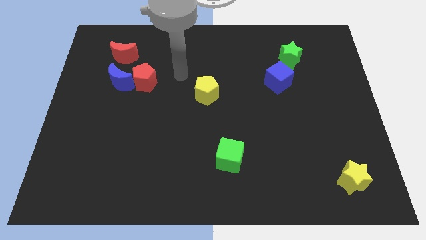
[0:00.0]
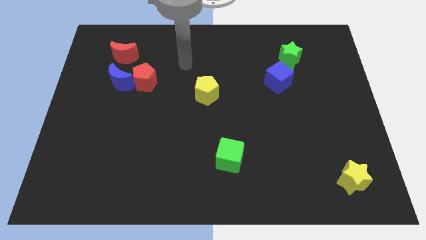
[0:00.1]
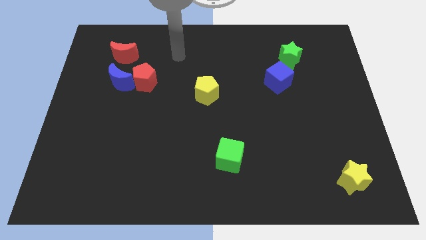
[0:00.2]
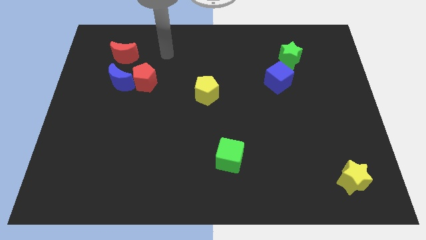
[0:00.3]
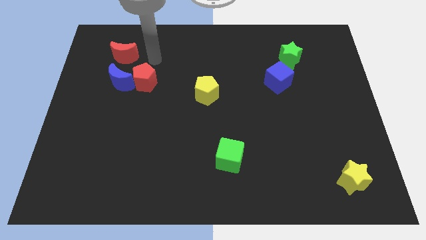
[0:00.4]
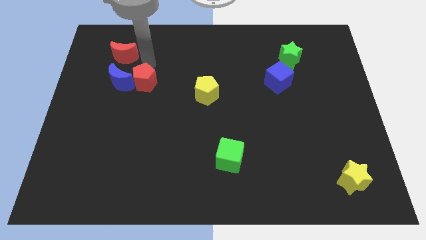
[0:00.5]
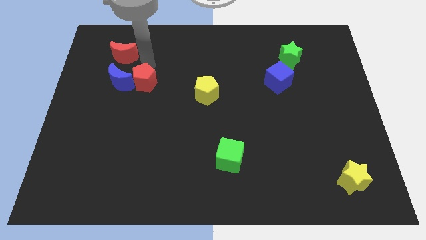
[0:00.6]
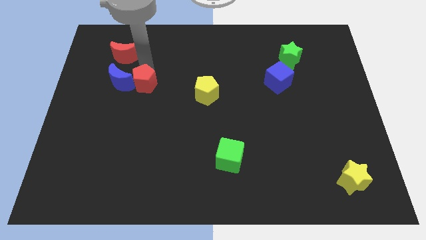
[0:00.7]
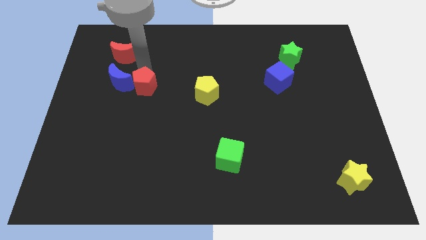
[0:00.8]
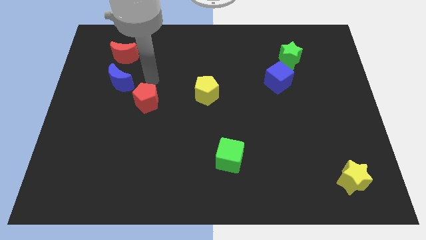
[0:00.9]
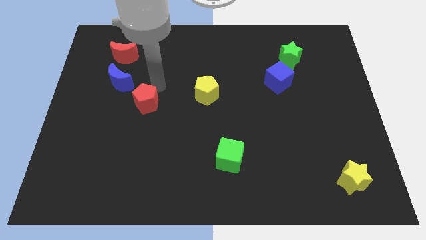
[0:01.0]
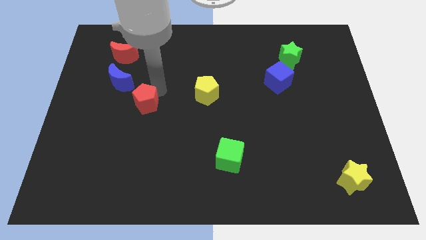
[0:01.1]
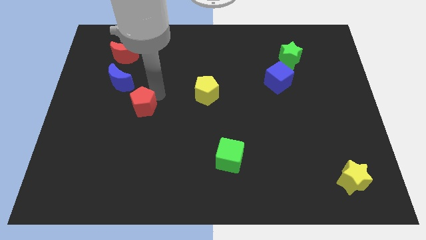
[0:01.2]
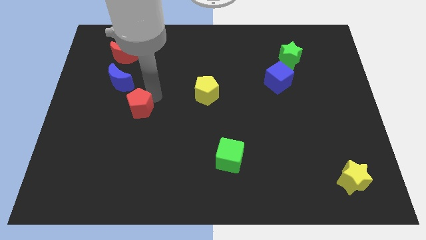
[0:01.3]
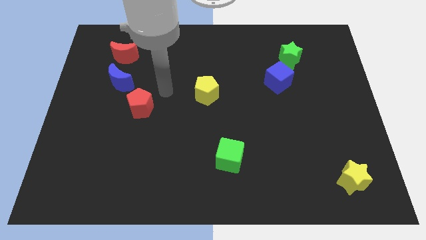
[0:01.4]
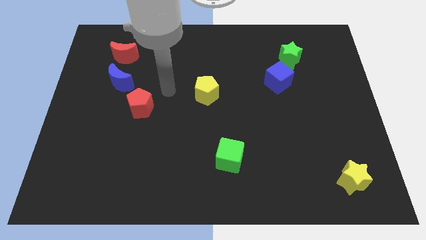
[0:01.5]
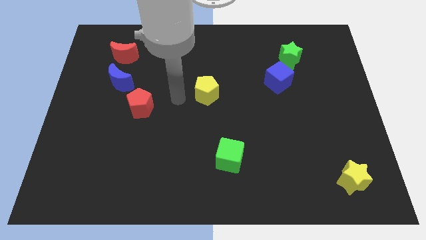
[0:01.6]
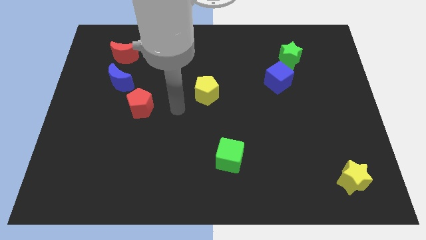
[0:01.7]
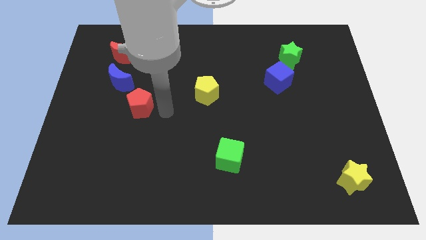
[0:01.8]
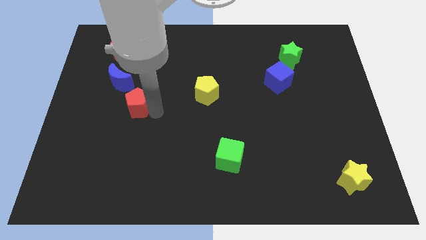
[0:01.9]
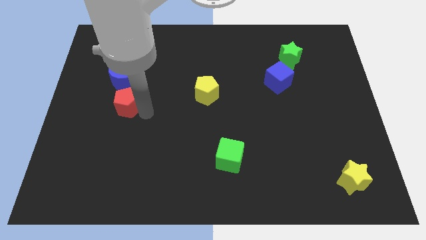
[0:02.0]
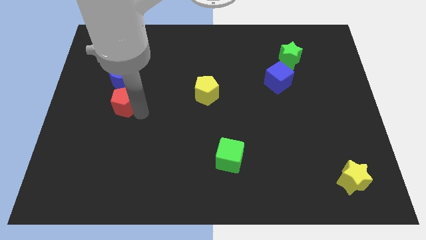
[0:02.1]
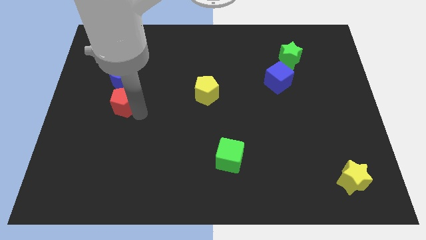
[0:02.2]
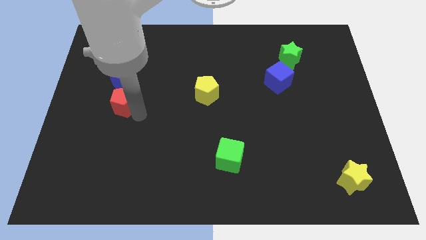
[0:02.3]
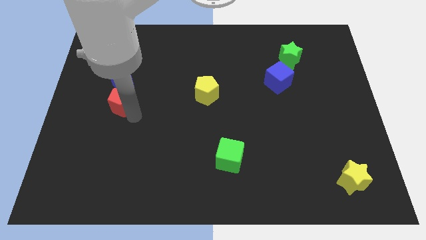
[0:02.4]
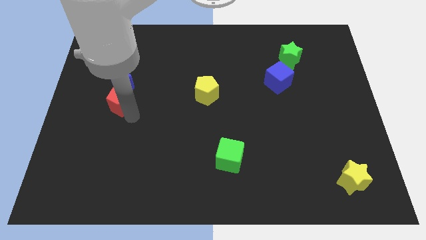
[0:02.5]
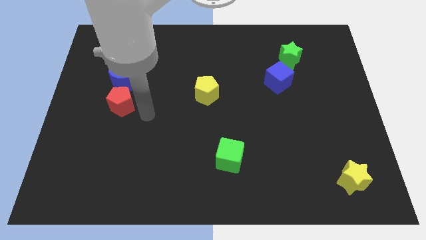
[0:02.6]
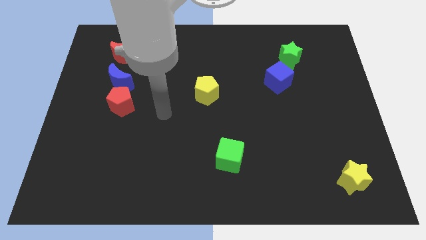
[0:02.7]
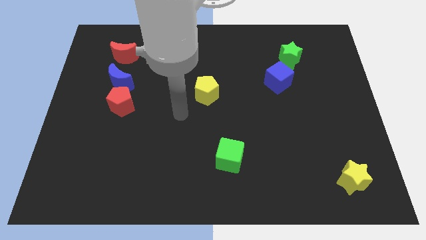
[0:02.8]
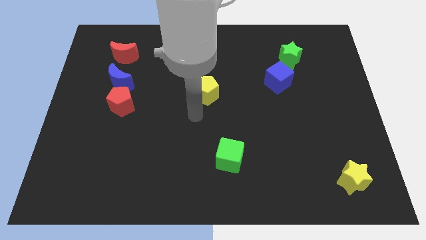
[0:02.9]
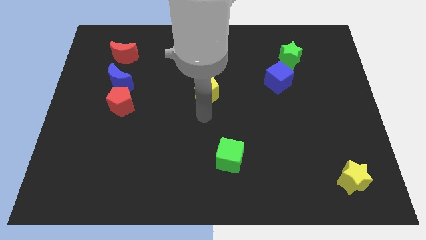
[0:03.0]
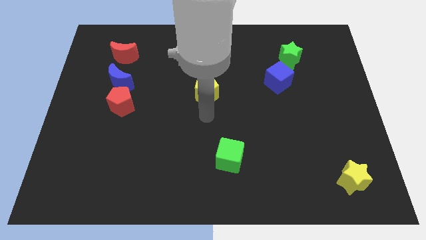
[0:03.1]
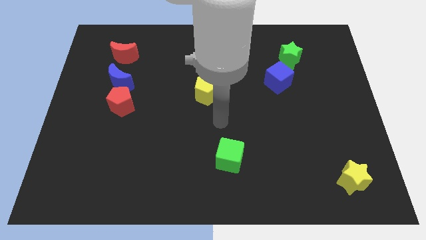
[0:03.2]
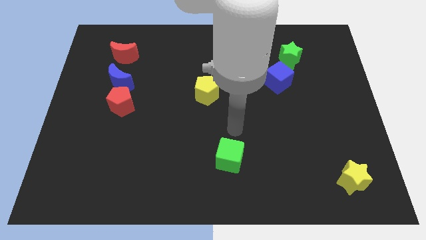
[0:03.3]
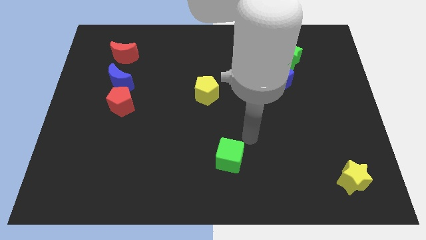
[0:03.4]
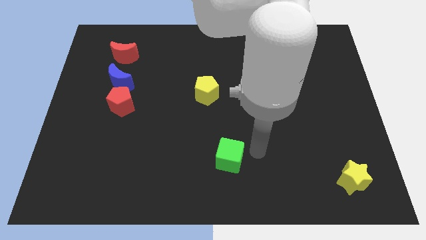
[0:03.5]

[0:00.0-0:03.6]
place the red pentagon below the blue moon

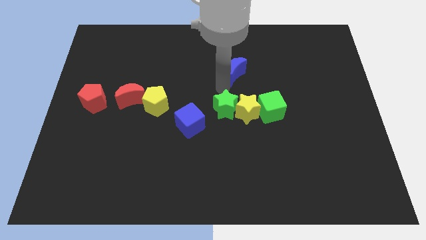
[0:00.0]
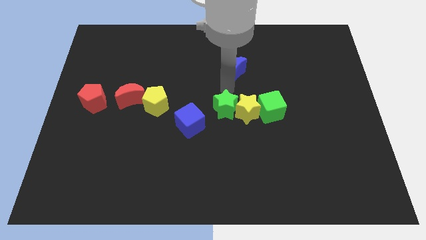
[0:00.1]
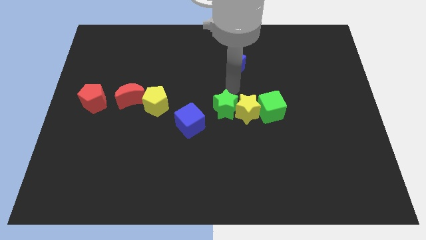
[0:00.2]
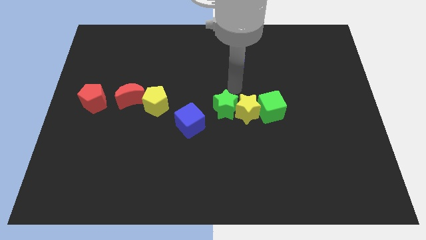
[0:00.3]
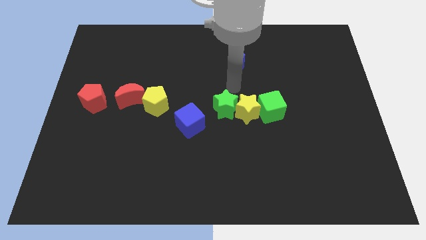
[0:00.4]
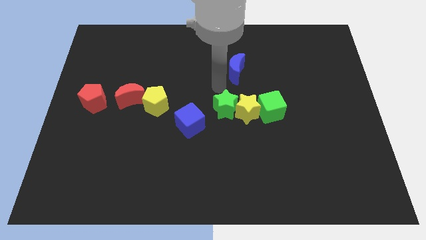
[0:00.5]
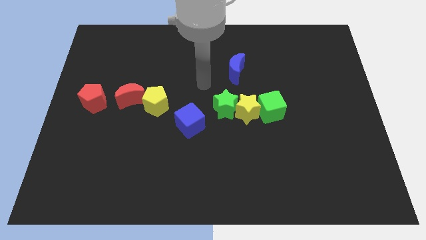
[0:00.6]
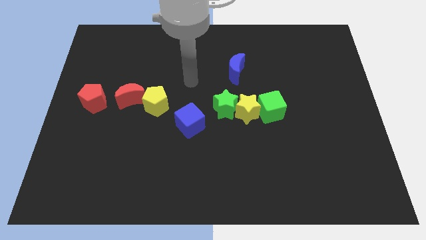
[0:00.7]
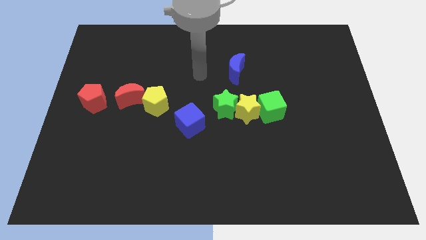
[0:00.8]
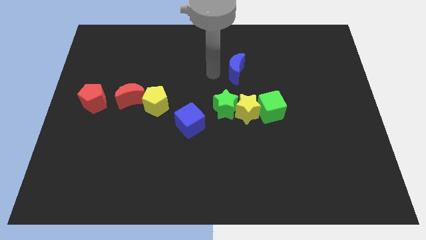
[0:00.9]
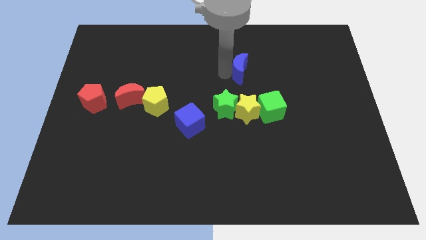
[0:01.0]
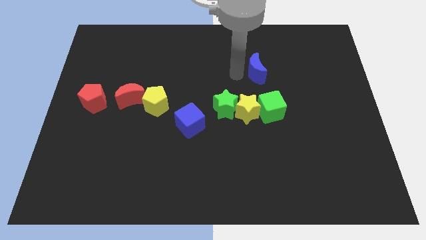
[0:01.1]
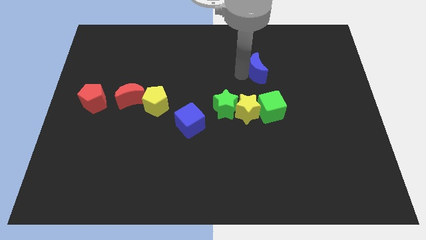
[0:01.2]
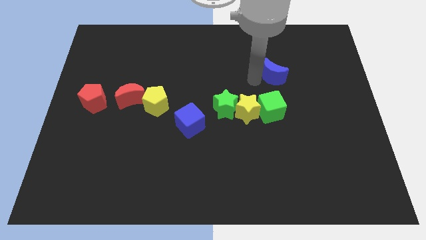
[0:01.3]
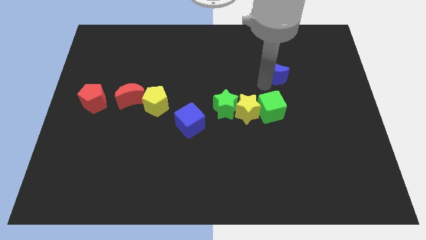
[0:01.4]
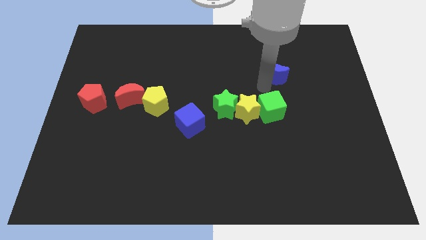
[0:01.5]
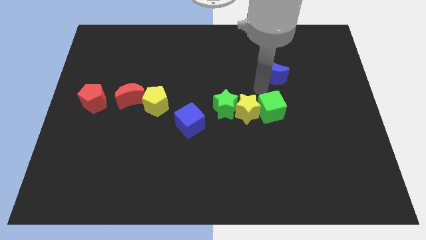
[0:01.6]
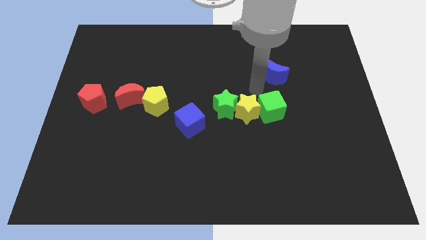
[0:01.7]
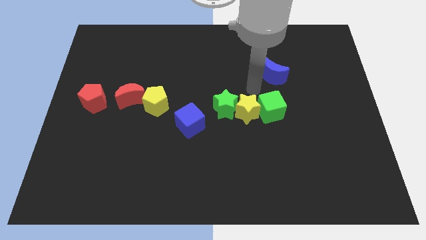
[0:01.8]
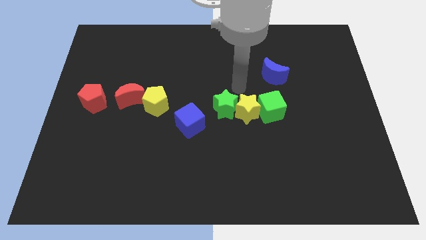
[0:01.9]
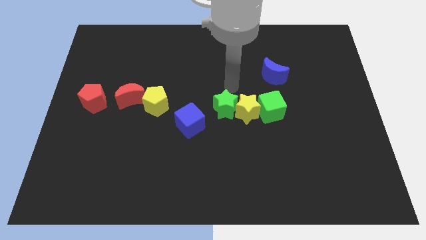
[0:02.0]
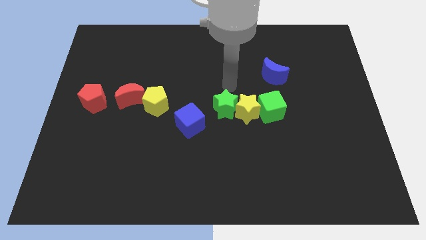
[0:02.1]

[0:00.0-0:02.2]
put blue moon on above the green cube

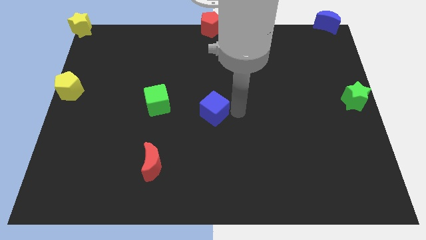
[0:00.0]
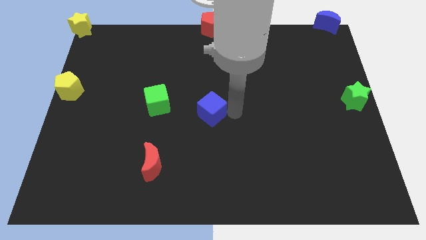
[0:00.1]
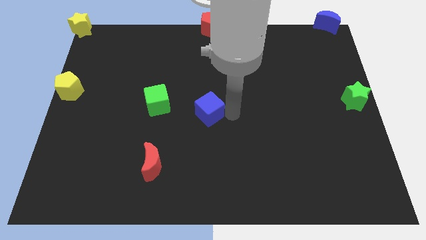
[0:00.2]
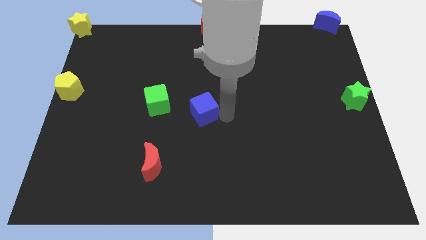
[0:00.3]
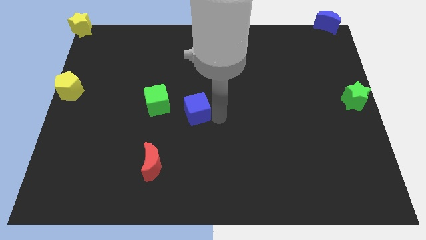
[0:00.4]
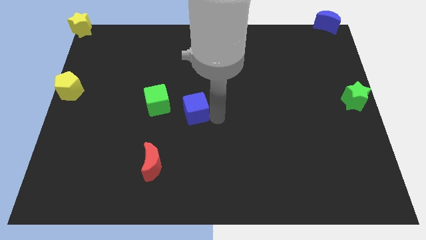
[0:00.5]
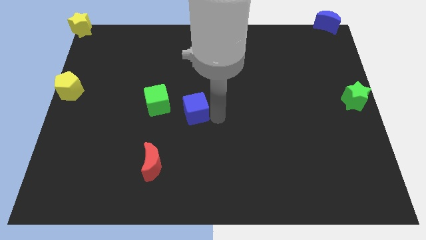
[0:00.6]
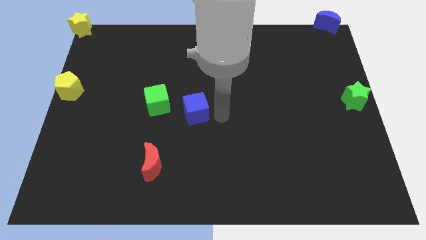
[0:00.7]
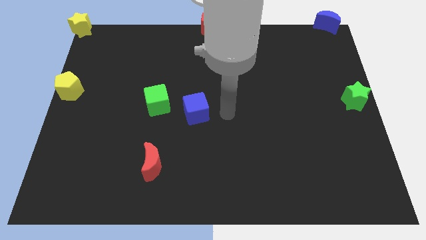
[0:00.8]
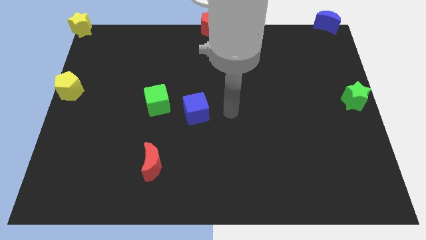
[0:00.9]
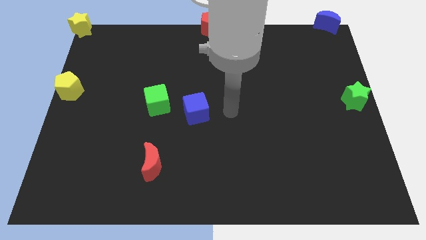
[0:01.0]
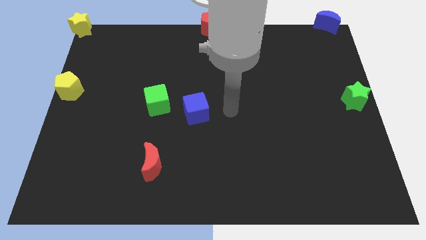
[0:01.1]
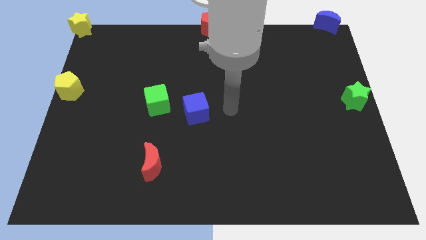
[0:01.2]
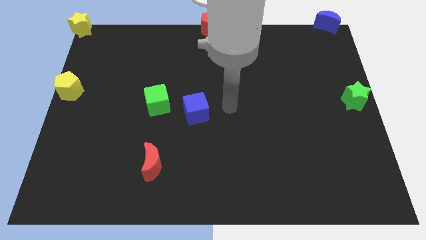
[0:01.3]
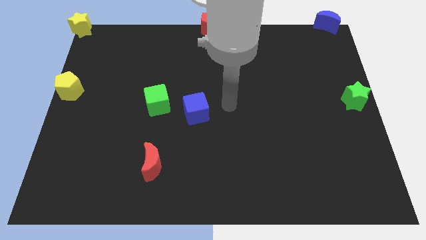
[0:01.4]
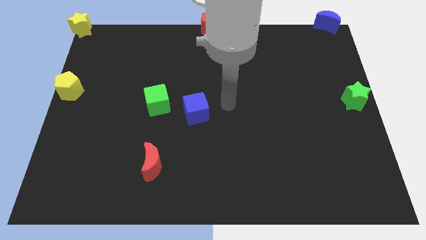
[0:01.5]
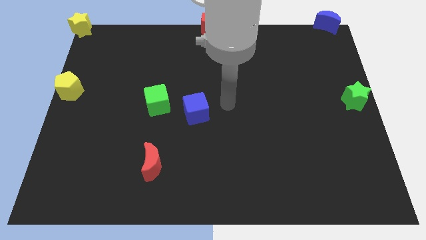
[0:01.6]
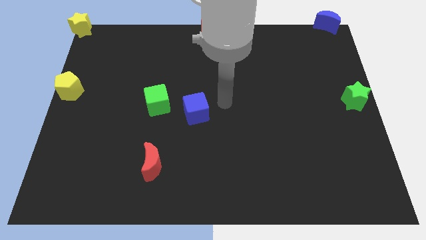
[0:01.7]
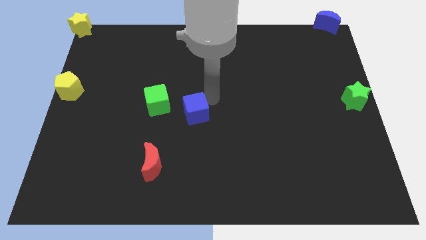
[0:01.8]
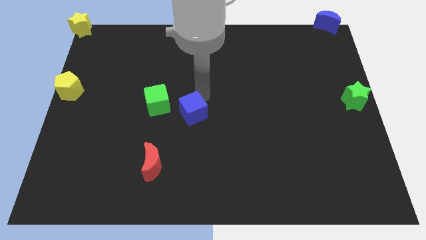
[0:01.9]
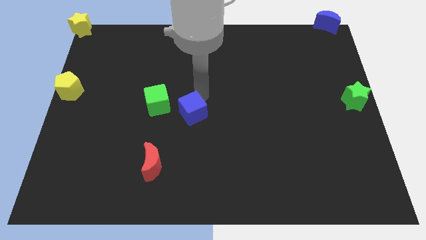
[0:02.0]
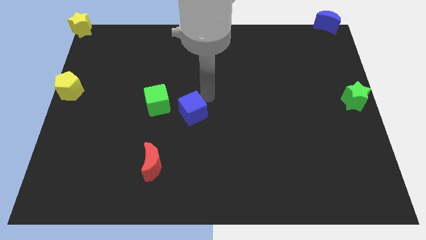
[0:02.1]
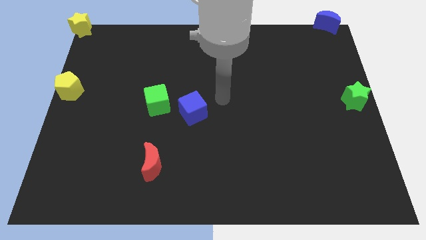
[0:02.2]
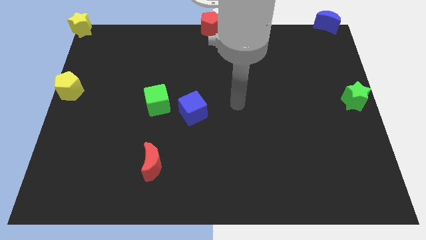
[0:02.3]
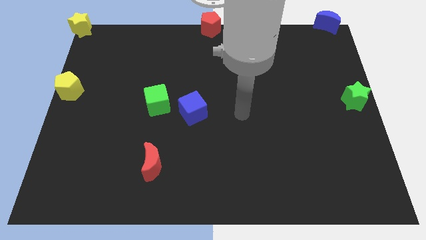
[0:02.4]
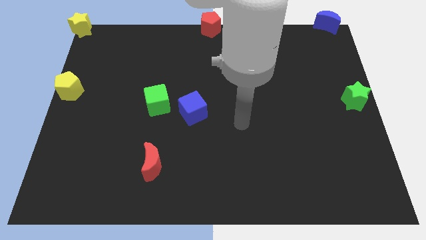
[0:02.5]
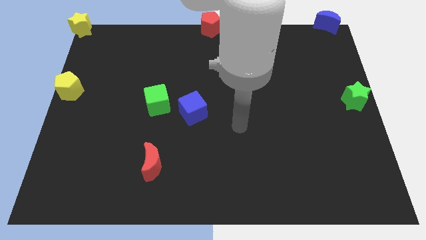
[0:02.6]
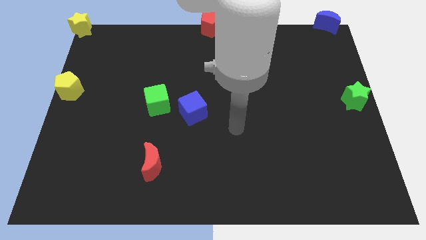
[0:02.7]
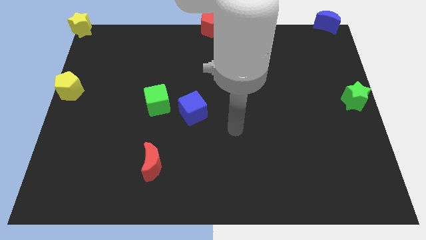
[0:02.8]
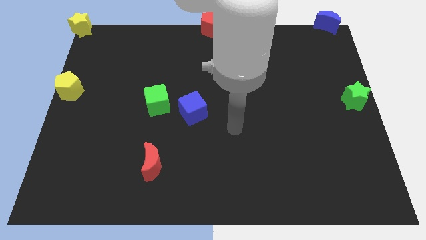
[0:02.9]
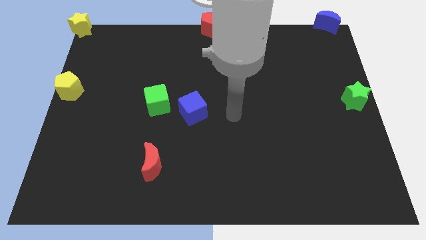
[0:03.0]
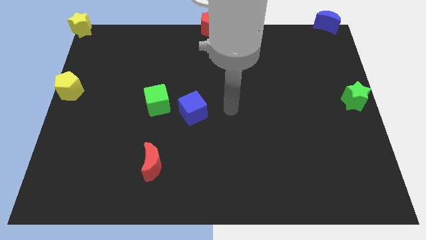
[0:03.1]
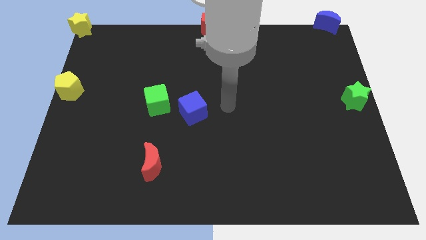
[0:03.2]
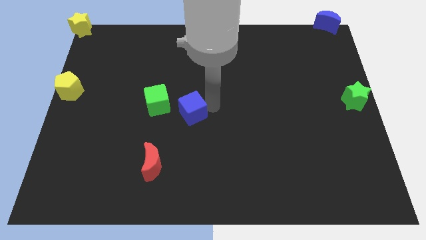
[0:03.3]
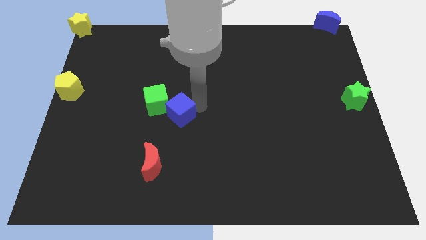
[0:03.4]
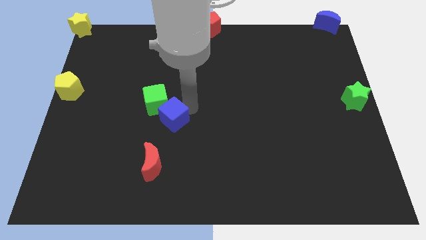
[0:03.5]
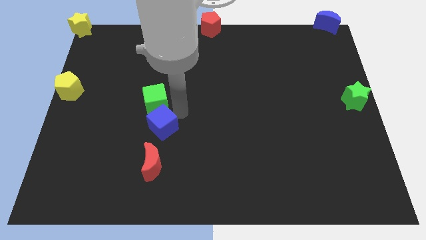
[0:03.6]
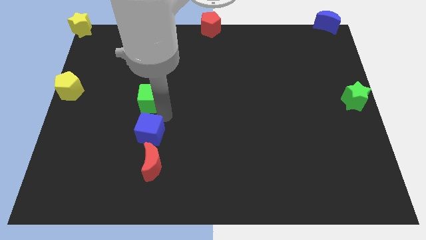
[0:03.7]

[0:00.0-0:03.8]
place the blue cube in between green cube and red moon
